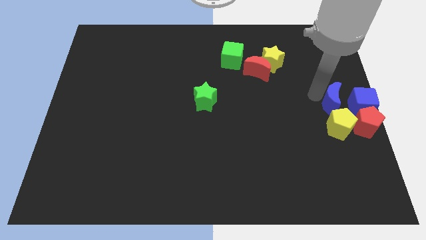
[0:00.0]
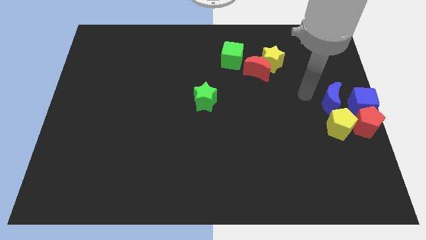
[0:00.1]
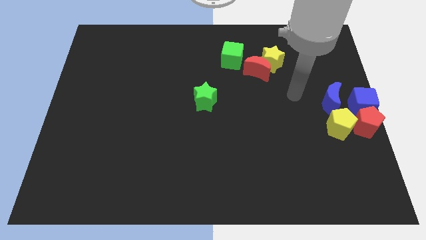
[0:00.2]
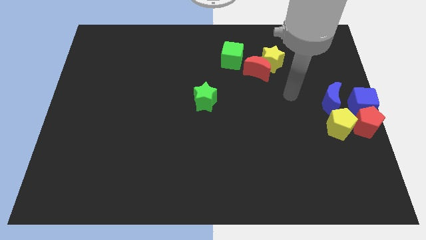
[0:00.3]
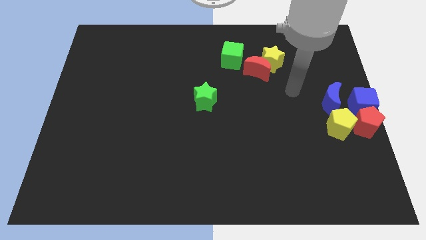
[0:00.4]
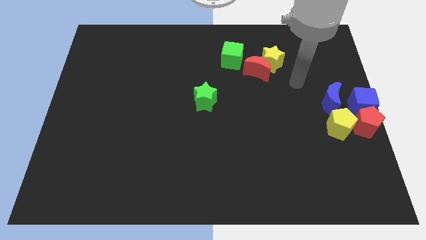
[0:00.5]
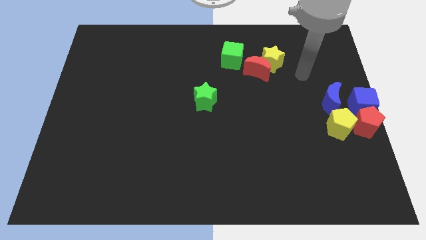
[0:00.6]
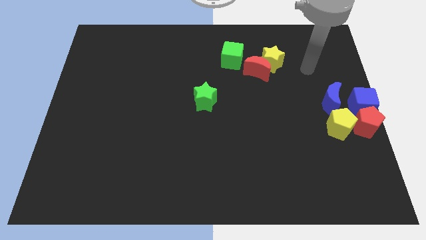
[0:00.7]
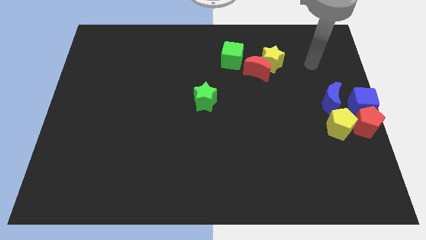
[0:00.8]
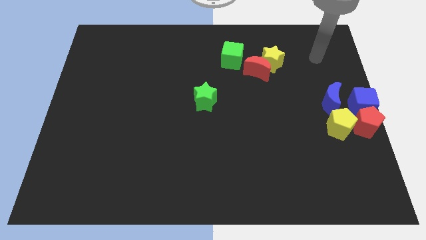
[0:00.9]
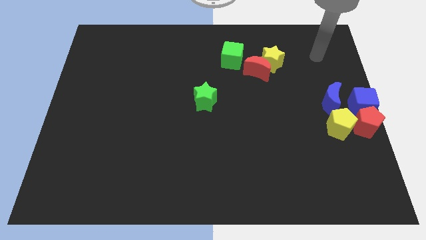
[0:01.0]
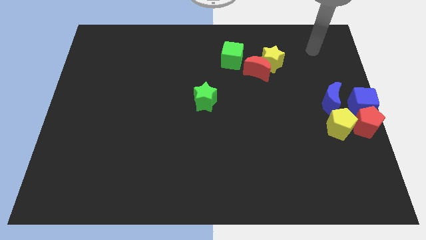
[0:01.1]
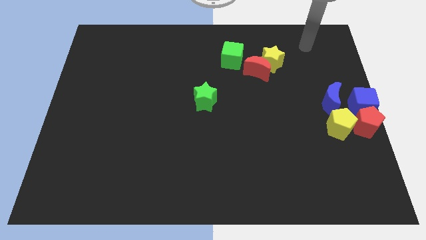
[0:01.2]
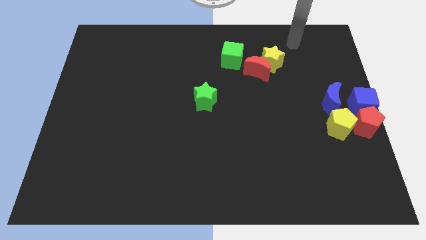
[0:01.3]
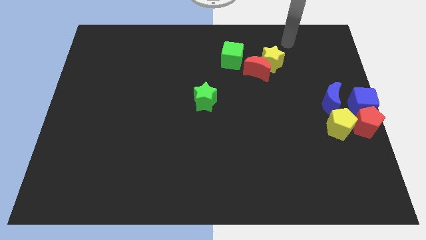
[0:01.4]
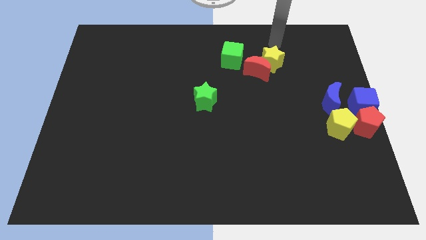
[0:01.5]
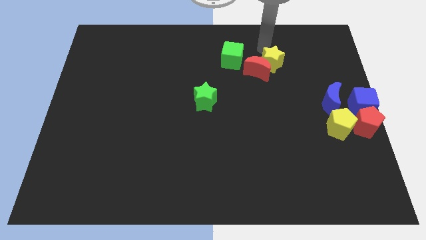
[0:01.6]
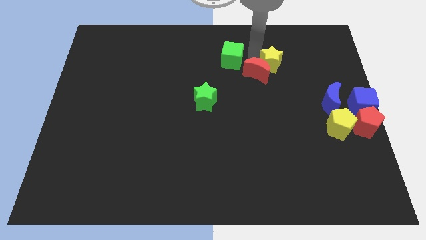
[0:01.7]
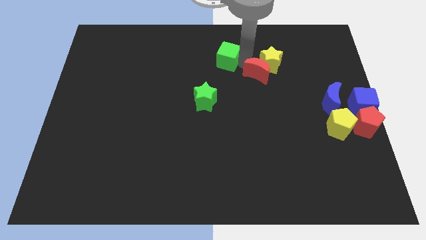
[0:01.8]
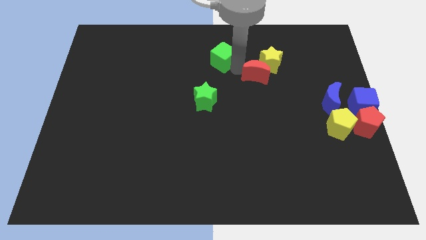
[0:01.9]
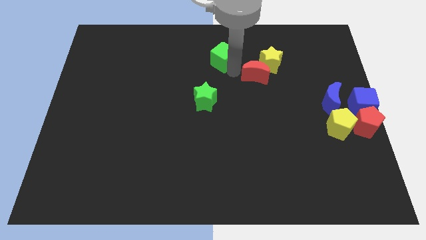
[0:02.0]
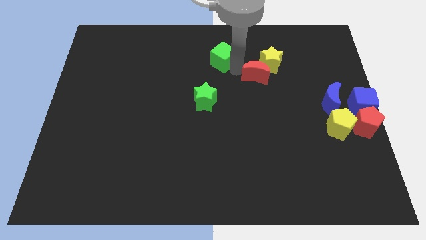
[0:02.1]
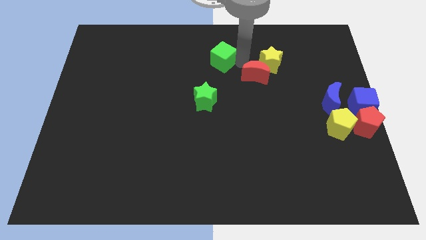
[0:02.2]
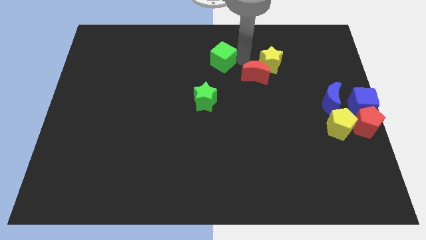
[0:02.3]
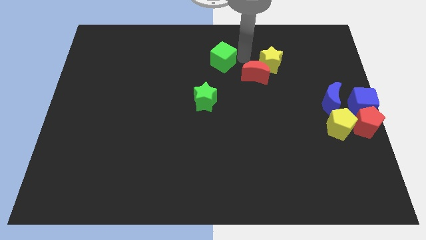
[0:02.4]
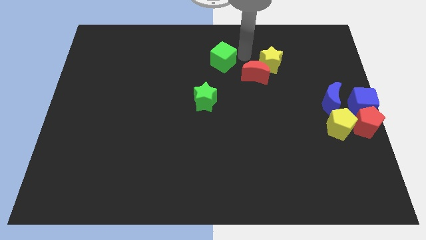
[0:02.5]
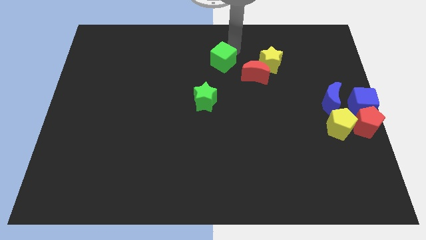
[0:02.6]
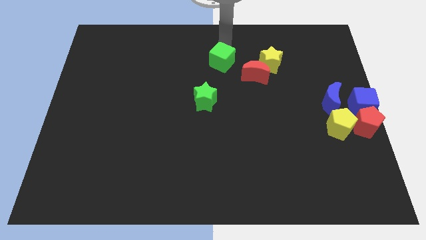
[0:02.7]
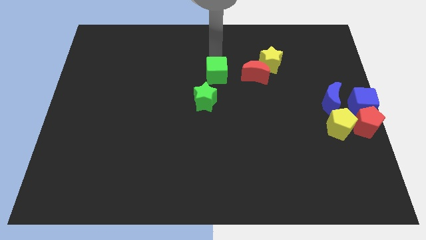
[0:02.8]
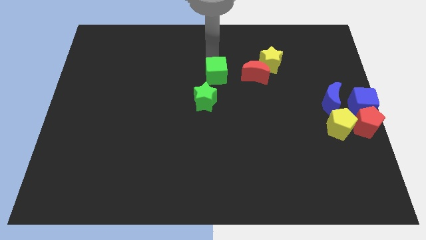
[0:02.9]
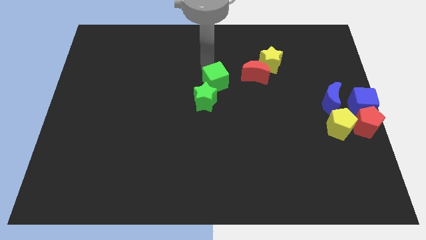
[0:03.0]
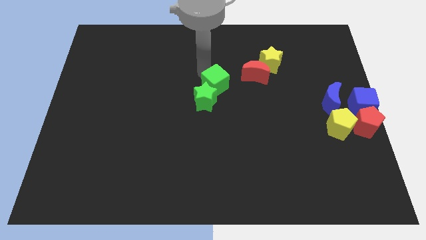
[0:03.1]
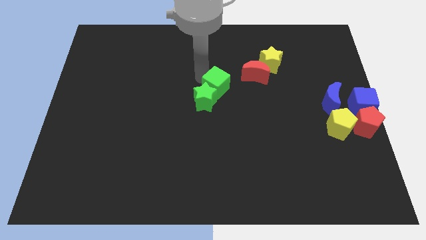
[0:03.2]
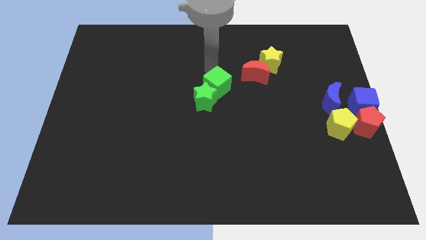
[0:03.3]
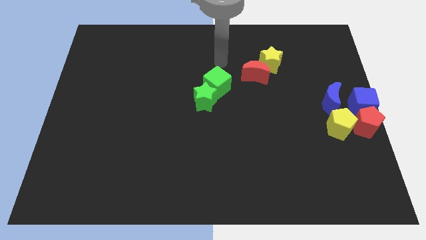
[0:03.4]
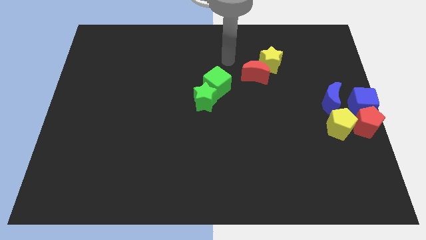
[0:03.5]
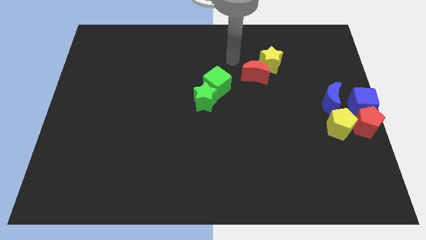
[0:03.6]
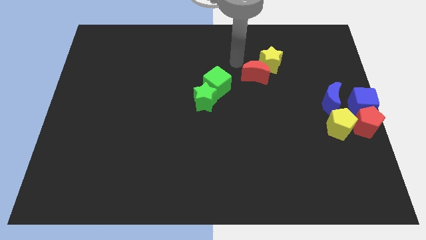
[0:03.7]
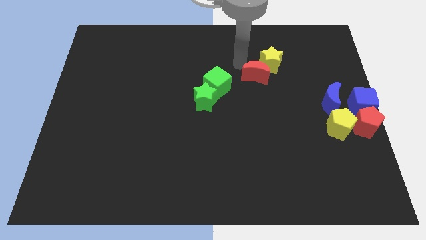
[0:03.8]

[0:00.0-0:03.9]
push the green cube into the green star

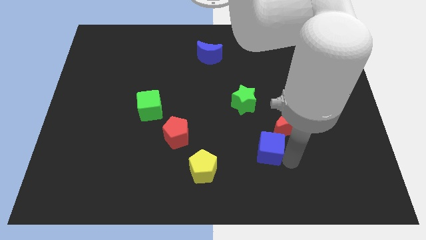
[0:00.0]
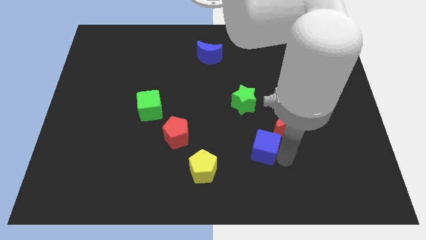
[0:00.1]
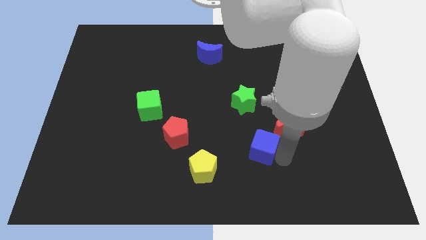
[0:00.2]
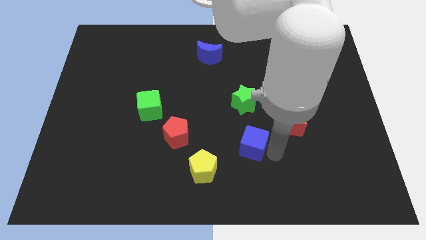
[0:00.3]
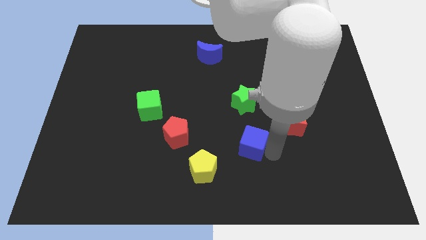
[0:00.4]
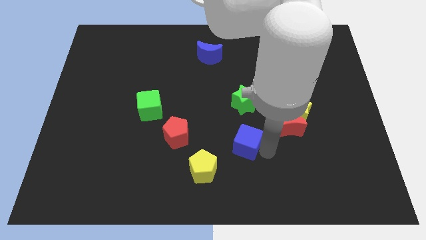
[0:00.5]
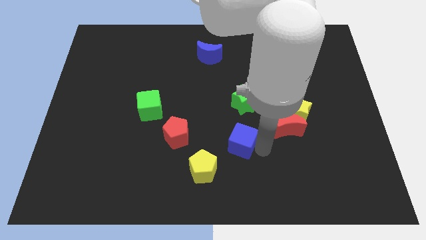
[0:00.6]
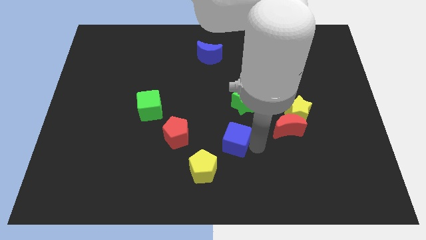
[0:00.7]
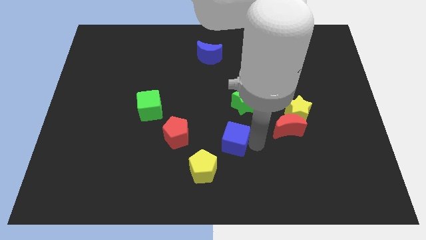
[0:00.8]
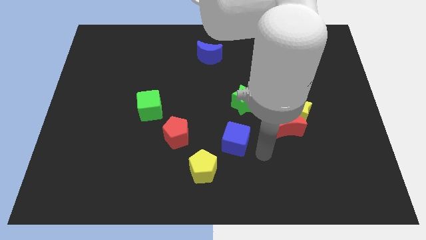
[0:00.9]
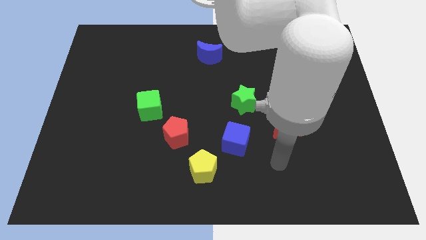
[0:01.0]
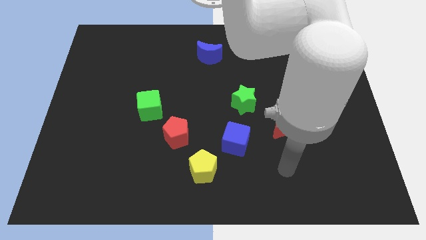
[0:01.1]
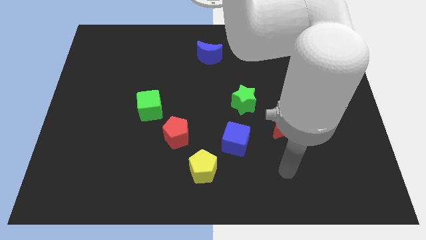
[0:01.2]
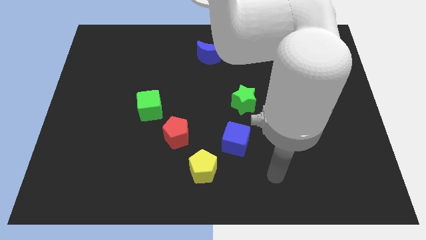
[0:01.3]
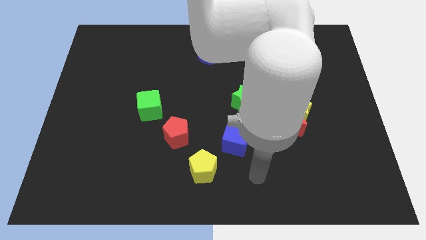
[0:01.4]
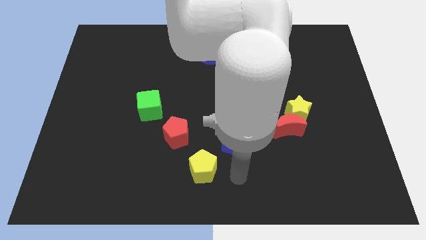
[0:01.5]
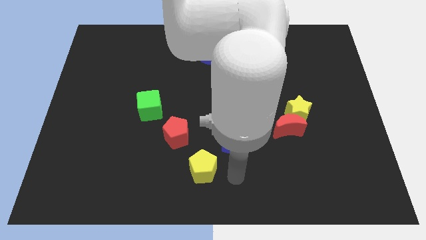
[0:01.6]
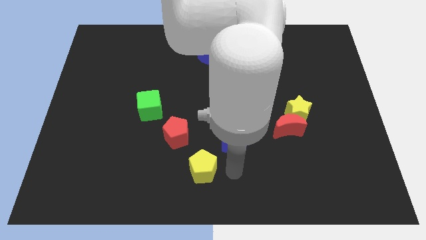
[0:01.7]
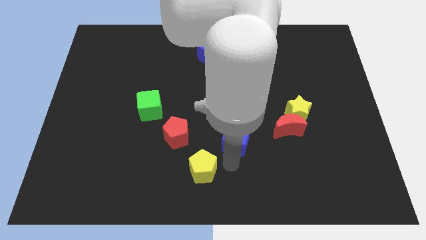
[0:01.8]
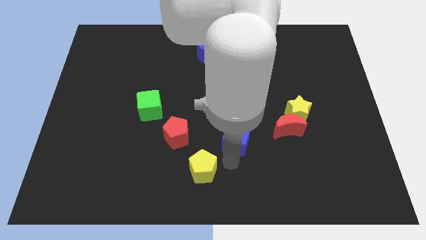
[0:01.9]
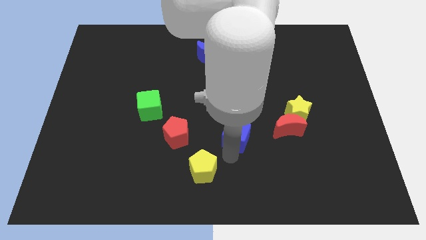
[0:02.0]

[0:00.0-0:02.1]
move the blue cube in between the green star and yellow pentagon

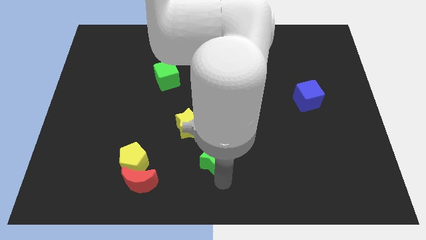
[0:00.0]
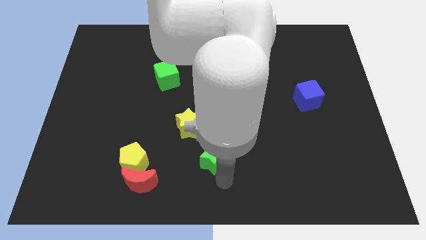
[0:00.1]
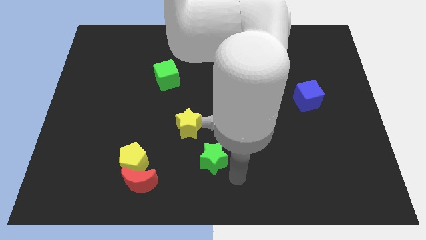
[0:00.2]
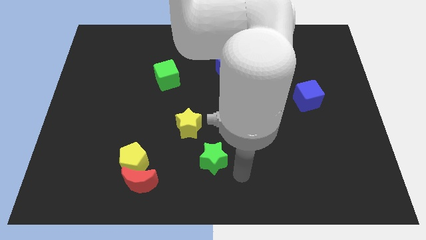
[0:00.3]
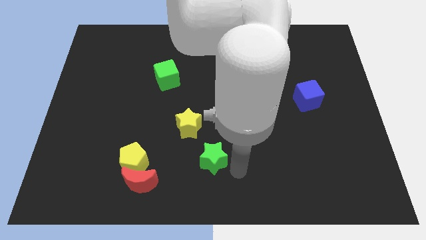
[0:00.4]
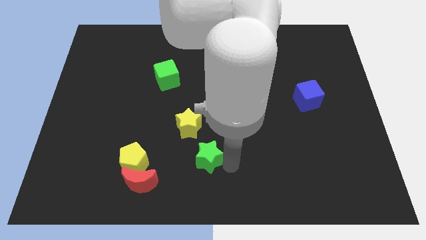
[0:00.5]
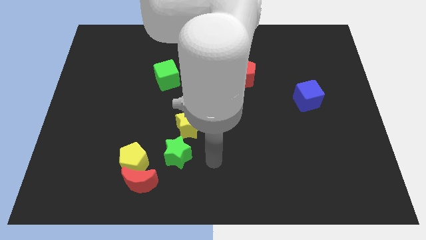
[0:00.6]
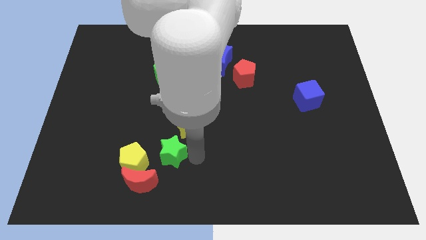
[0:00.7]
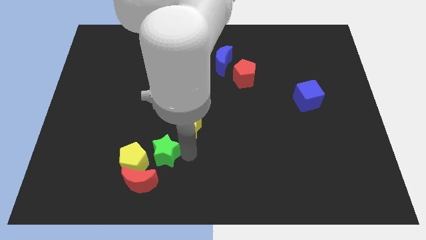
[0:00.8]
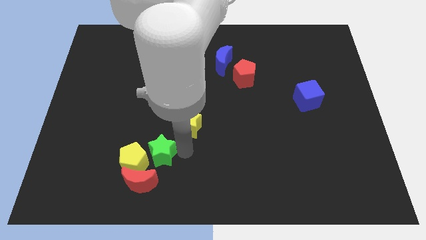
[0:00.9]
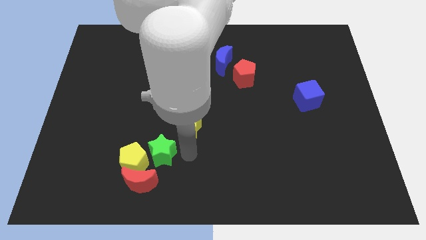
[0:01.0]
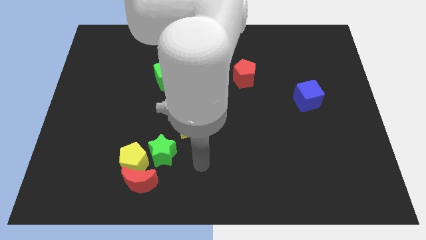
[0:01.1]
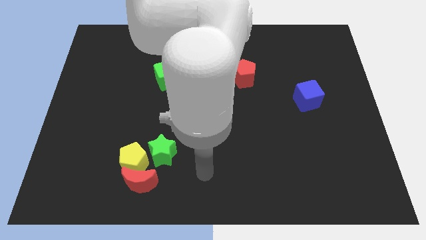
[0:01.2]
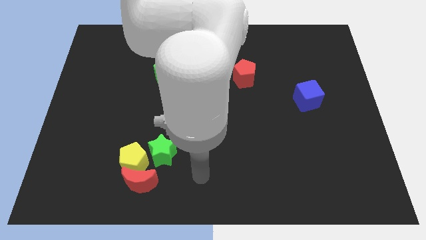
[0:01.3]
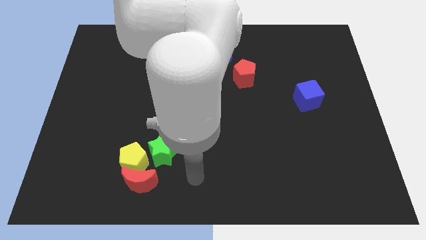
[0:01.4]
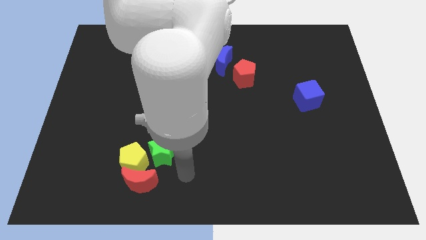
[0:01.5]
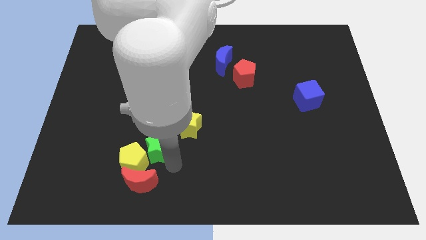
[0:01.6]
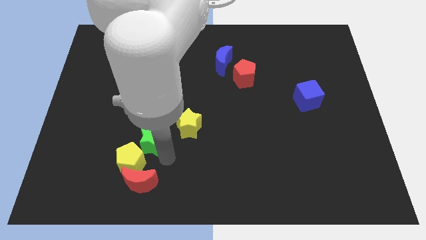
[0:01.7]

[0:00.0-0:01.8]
place the green star diagonally to the yellow pentagon

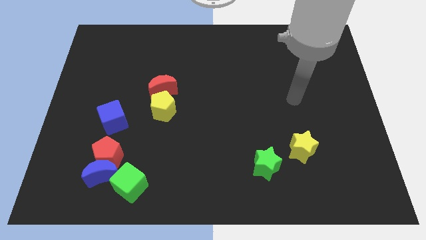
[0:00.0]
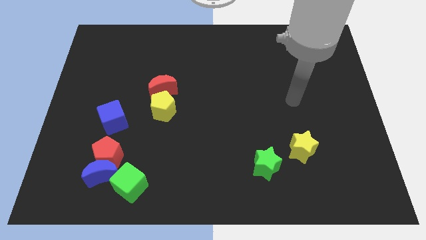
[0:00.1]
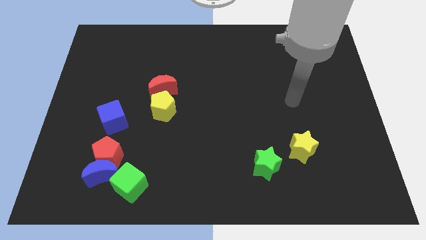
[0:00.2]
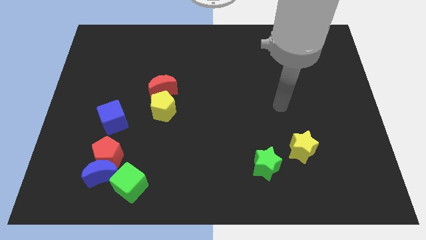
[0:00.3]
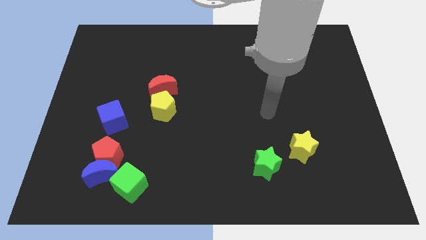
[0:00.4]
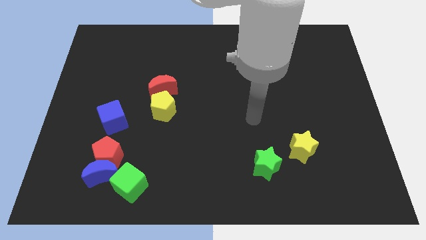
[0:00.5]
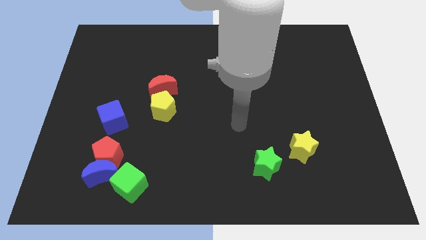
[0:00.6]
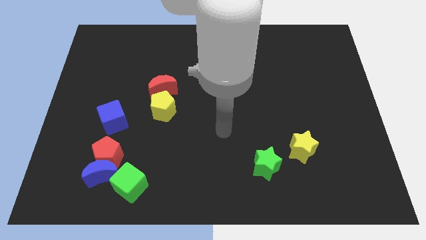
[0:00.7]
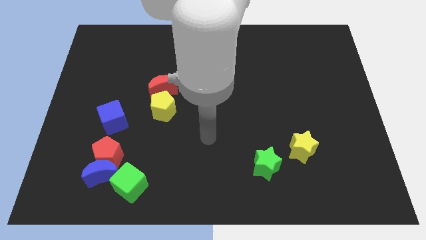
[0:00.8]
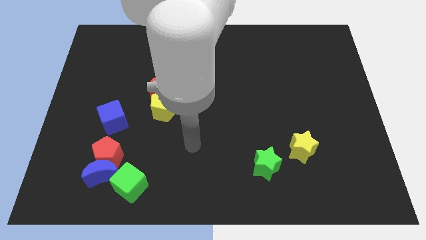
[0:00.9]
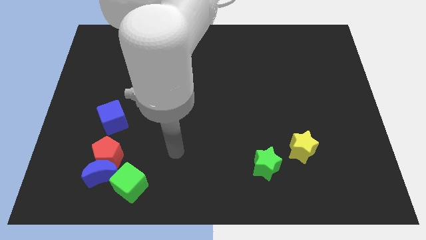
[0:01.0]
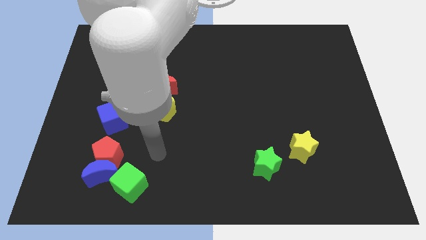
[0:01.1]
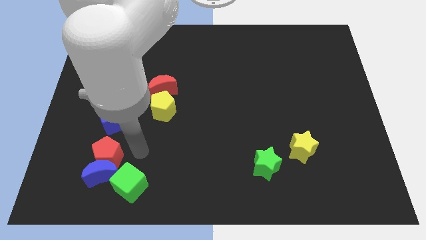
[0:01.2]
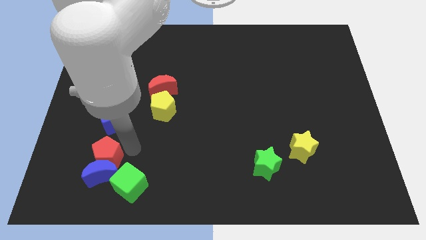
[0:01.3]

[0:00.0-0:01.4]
move your arm towards the red pentagon
